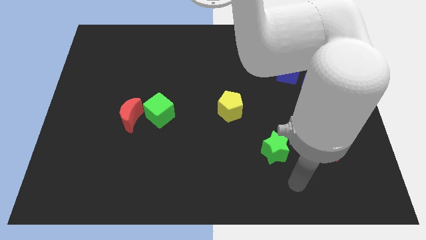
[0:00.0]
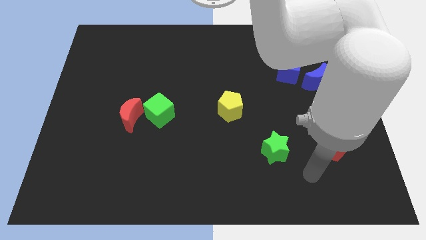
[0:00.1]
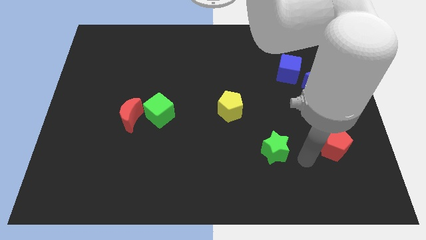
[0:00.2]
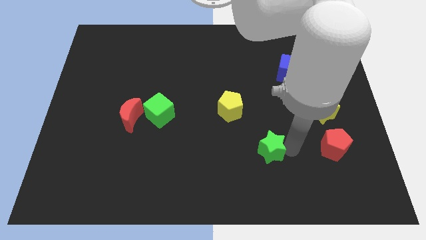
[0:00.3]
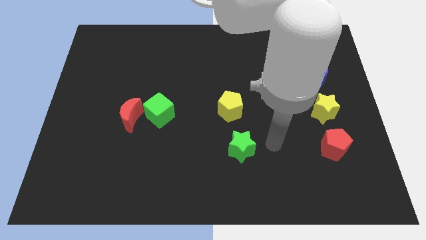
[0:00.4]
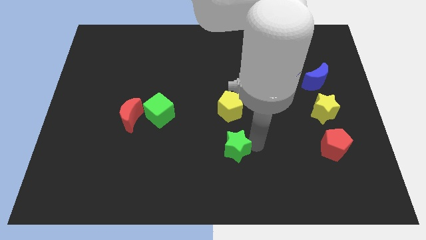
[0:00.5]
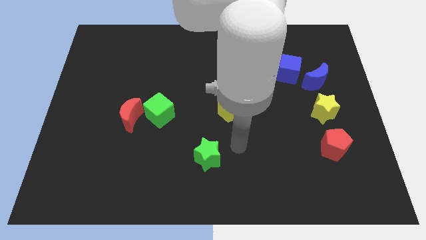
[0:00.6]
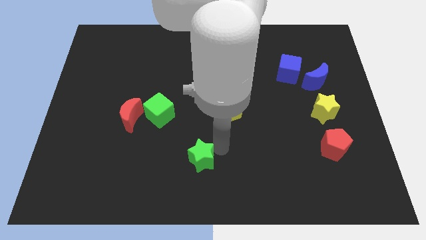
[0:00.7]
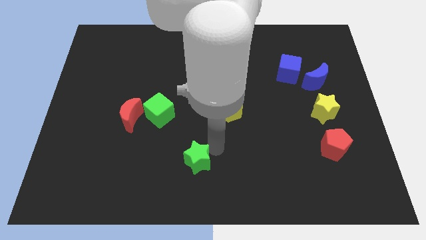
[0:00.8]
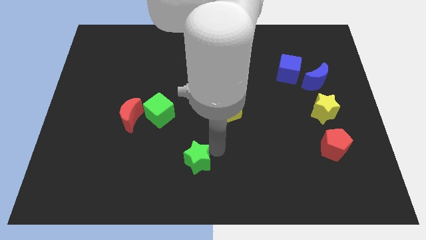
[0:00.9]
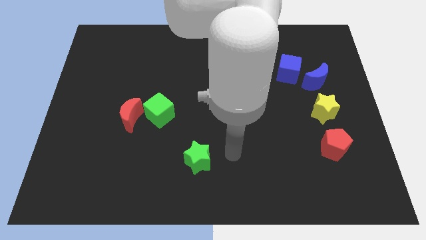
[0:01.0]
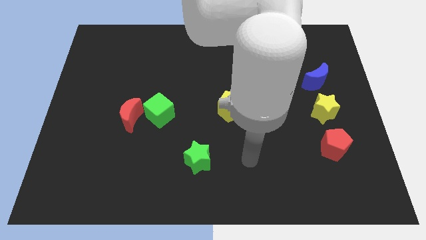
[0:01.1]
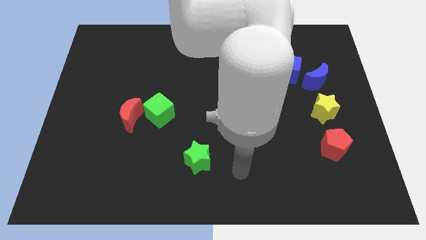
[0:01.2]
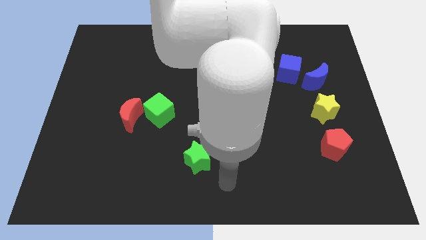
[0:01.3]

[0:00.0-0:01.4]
push the green star to the bottom right diagonal of green cube

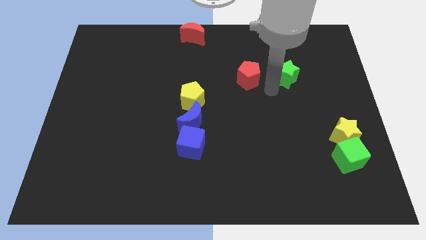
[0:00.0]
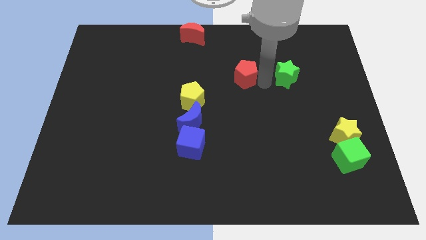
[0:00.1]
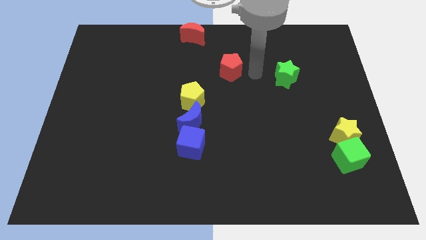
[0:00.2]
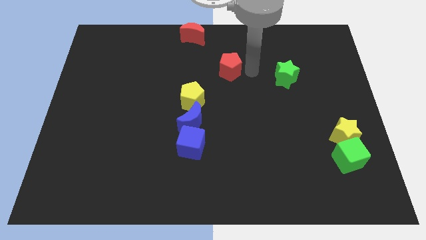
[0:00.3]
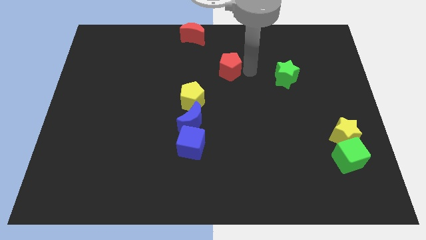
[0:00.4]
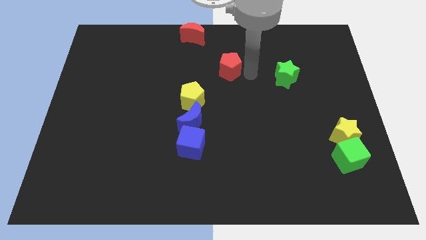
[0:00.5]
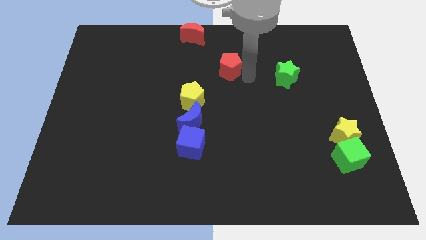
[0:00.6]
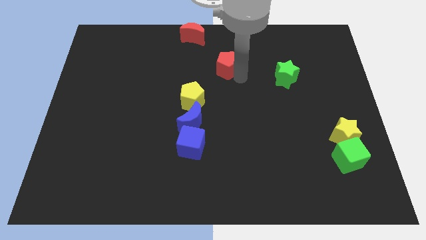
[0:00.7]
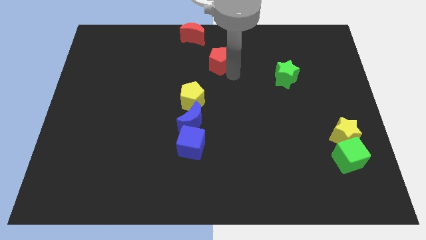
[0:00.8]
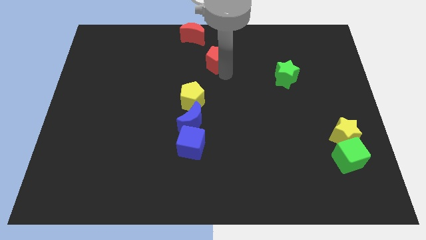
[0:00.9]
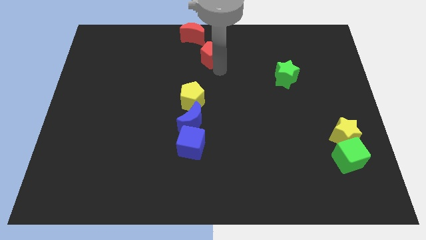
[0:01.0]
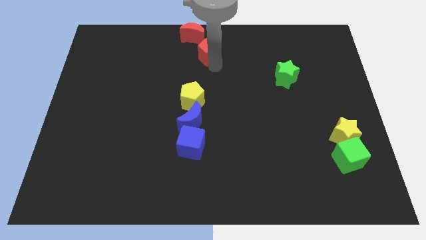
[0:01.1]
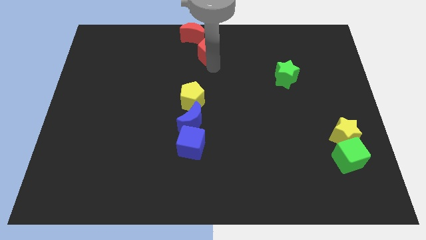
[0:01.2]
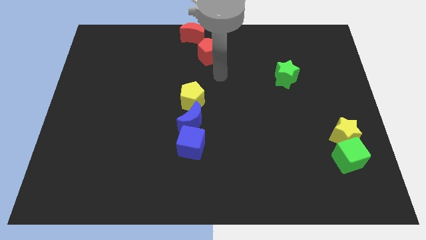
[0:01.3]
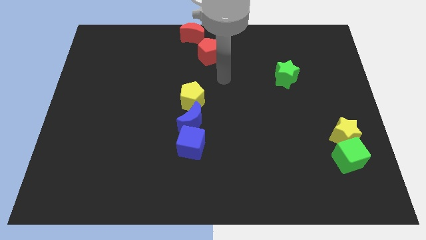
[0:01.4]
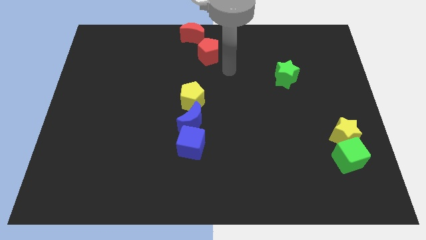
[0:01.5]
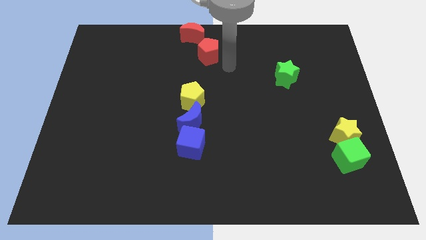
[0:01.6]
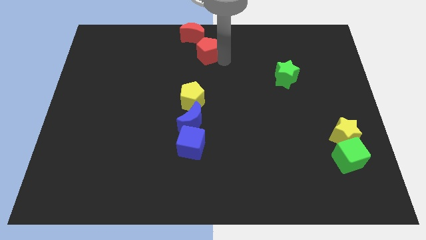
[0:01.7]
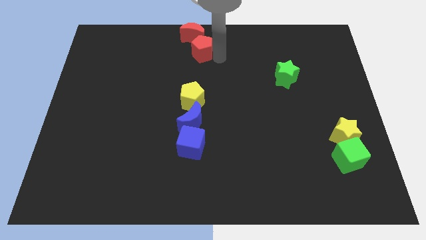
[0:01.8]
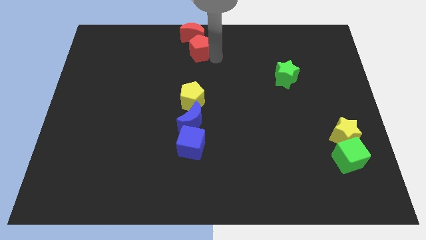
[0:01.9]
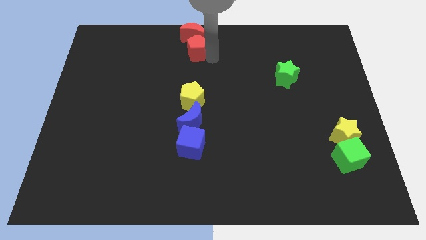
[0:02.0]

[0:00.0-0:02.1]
place the red pentagon to the bottom of the red crescent

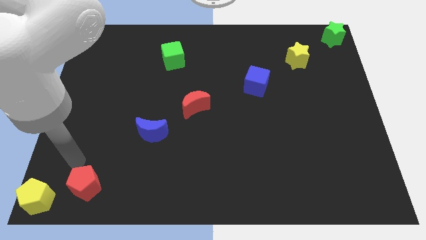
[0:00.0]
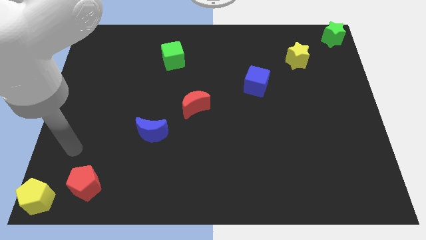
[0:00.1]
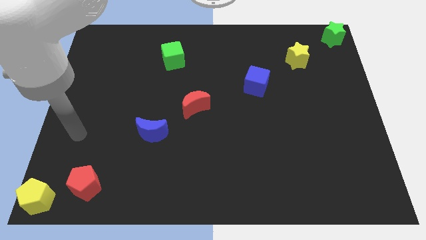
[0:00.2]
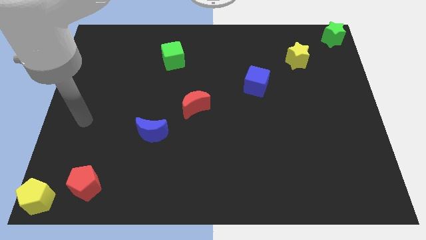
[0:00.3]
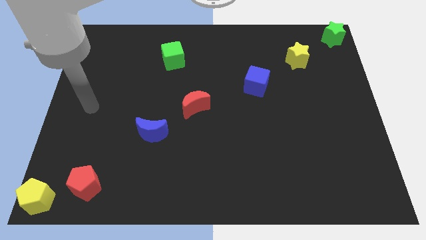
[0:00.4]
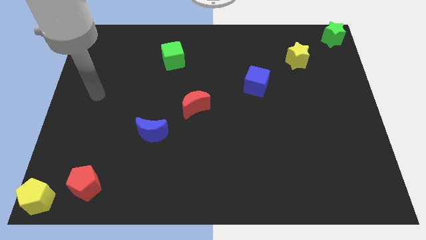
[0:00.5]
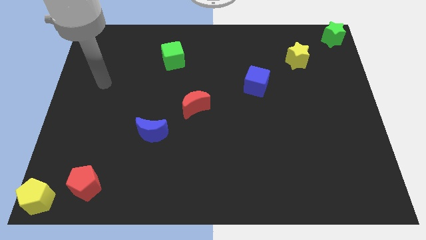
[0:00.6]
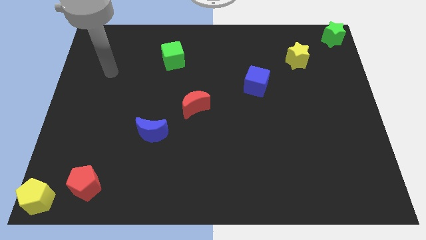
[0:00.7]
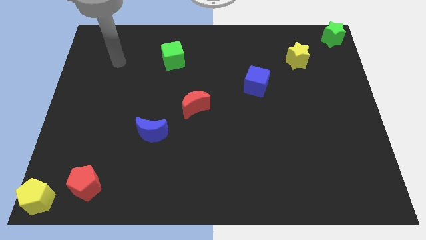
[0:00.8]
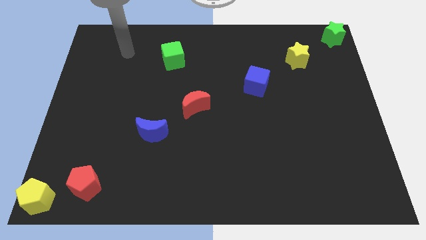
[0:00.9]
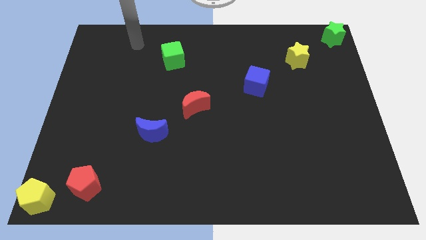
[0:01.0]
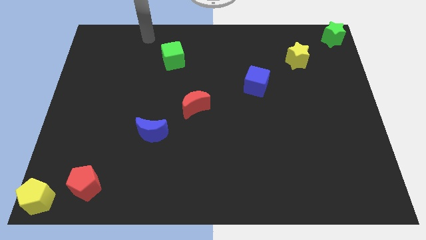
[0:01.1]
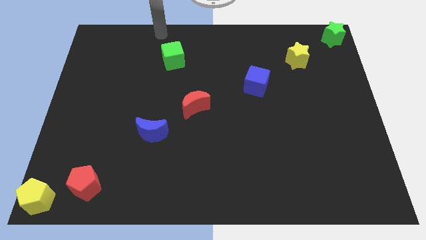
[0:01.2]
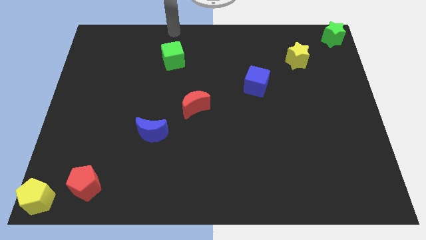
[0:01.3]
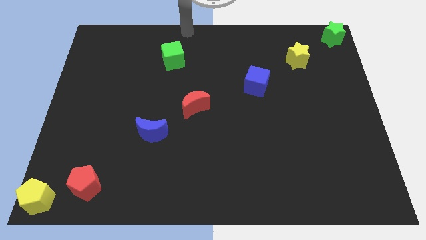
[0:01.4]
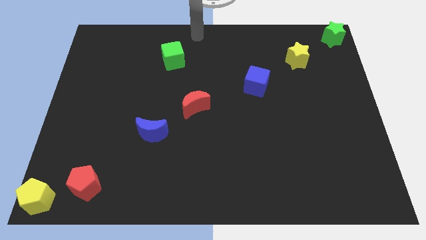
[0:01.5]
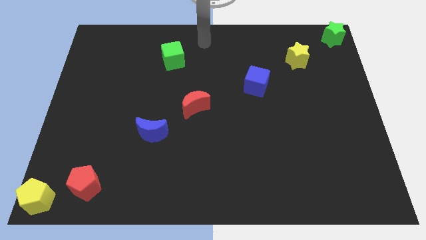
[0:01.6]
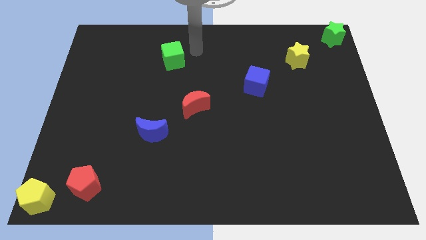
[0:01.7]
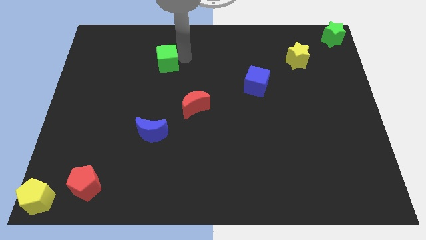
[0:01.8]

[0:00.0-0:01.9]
point the arm to the right of the green cube

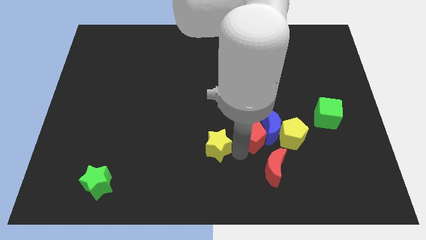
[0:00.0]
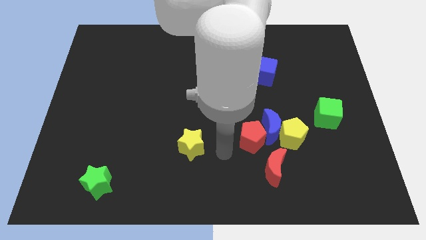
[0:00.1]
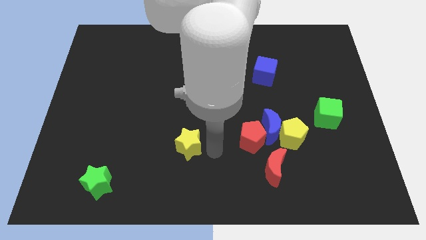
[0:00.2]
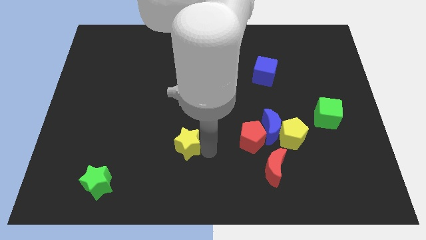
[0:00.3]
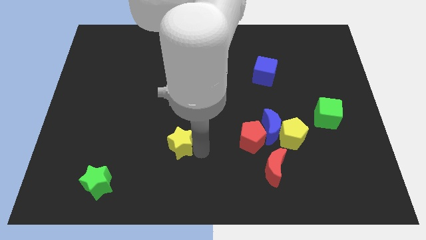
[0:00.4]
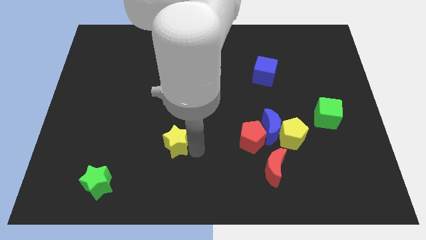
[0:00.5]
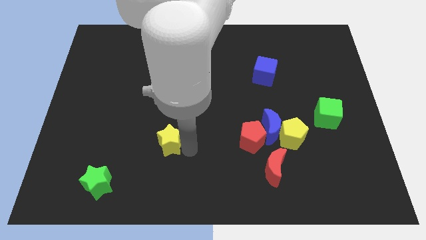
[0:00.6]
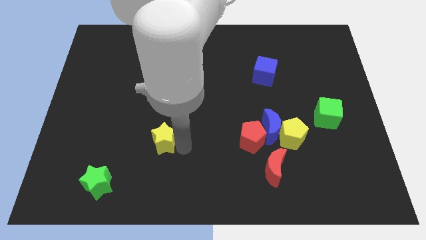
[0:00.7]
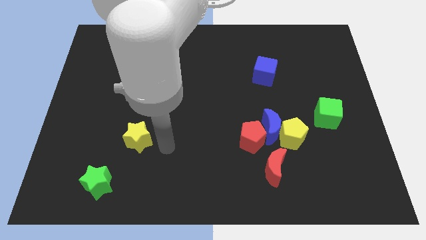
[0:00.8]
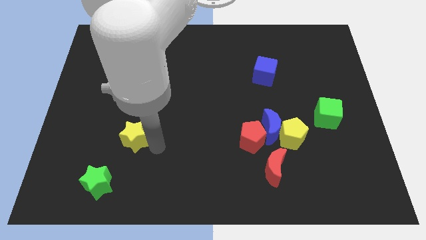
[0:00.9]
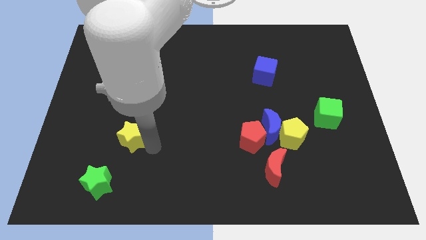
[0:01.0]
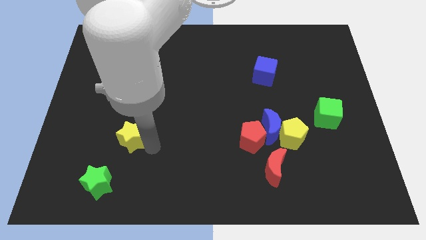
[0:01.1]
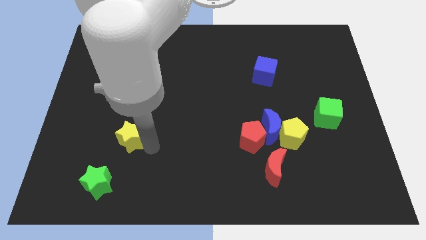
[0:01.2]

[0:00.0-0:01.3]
move the yellow star to the top right of the green star

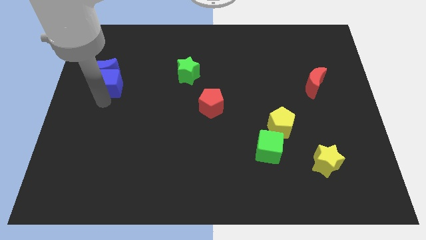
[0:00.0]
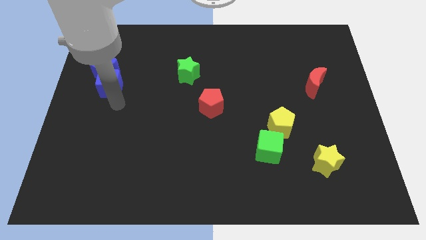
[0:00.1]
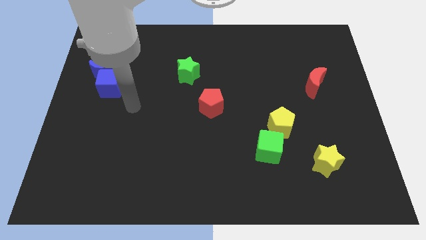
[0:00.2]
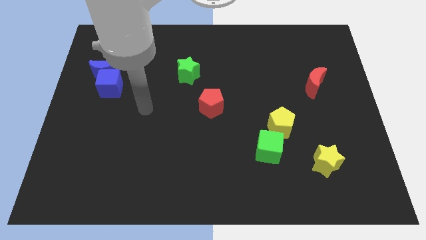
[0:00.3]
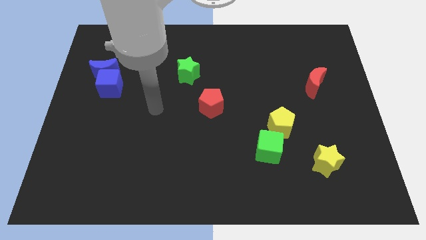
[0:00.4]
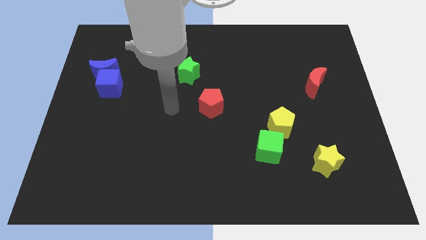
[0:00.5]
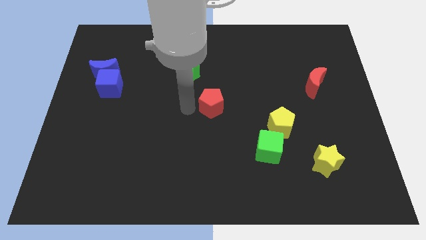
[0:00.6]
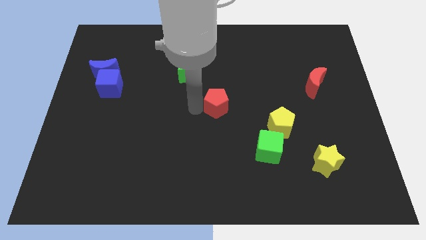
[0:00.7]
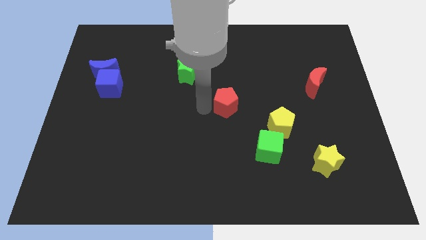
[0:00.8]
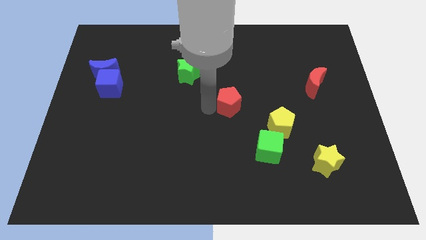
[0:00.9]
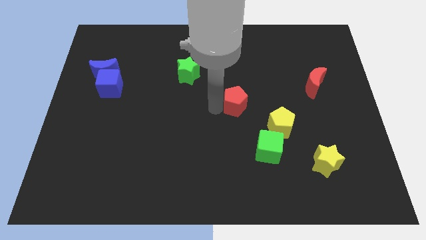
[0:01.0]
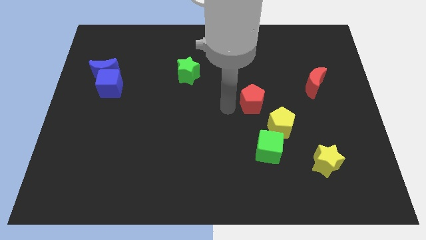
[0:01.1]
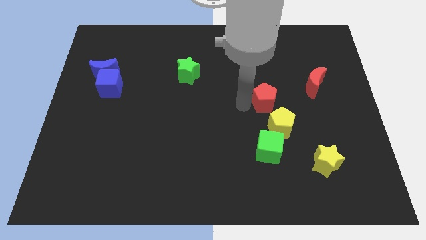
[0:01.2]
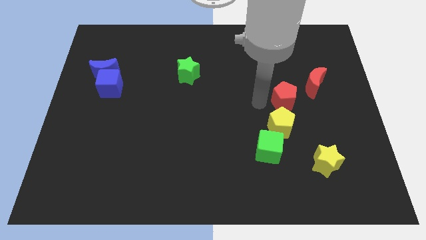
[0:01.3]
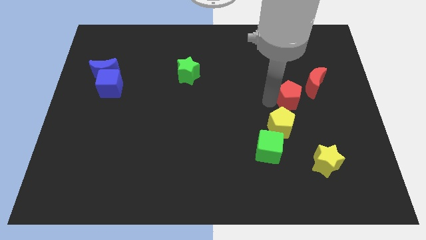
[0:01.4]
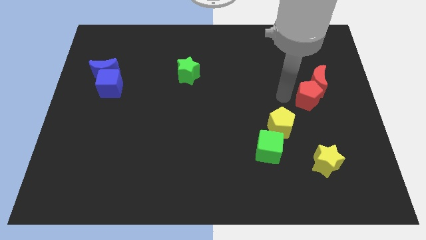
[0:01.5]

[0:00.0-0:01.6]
drag the red pentagon into the bottom side of the red moon

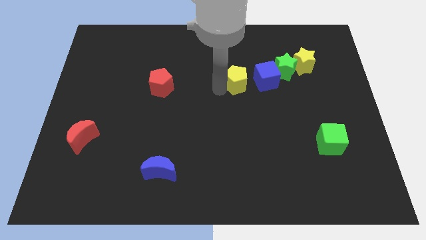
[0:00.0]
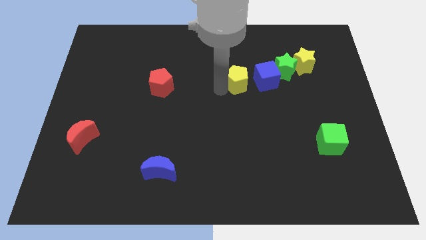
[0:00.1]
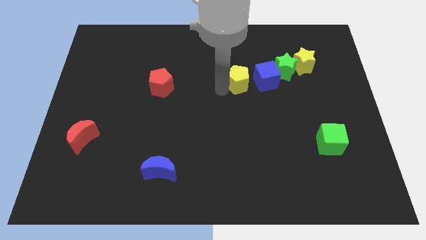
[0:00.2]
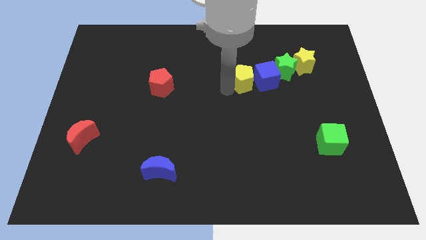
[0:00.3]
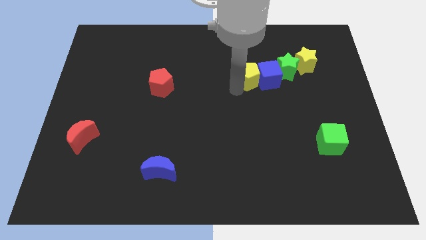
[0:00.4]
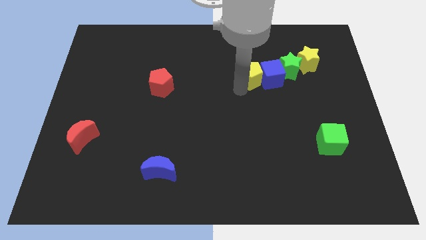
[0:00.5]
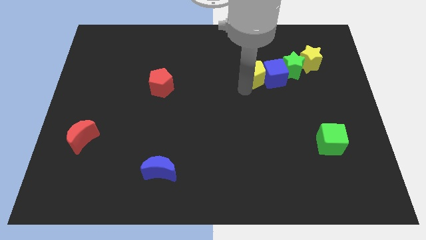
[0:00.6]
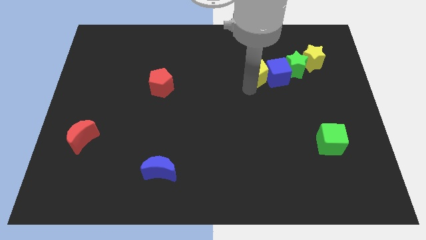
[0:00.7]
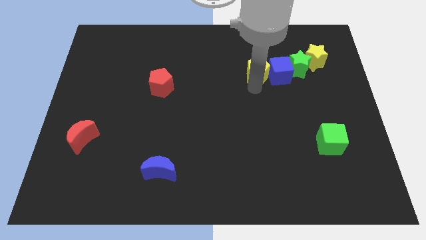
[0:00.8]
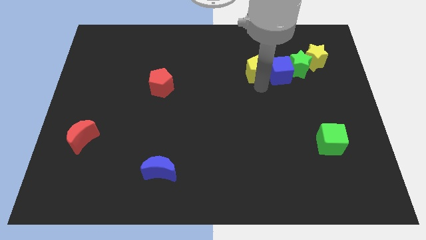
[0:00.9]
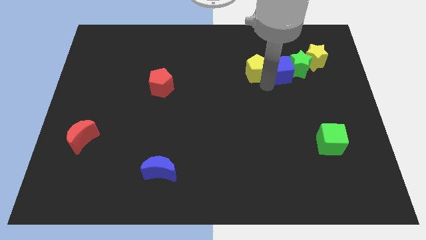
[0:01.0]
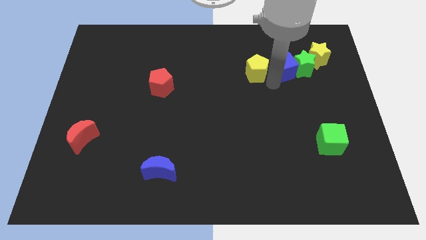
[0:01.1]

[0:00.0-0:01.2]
push the yellow pentagon into the blue cube
